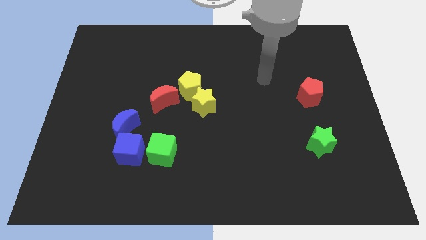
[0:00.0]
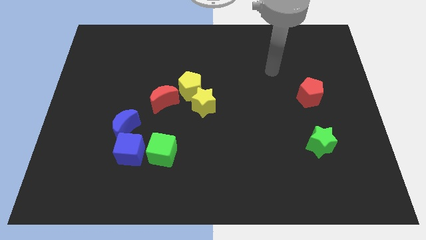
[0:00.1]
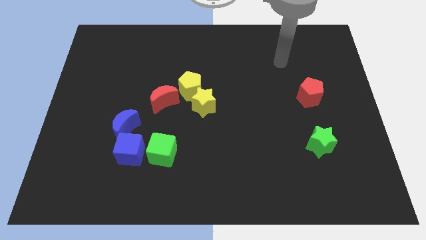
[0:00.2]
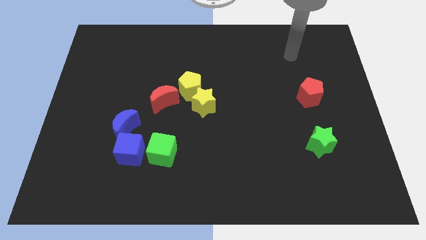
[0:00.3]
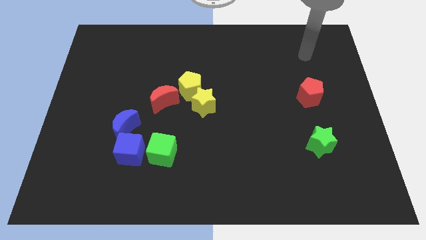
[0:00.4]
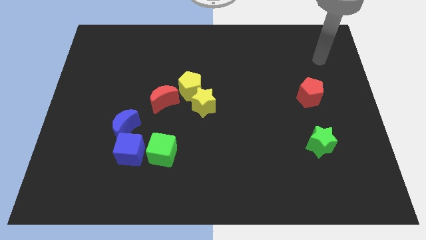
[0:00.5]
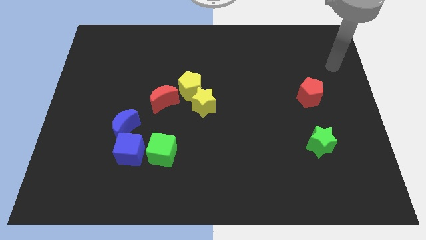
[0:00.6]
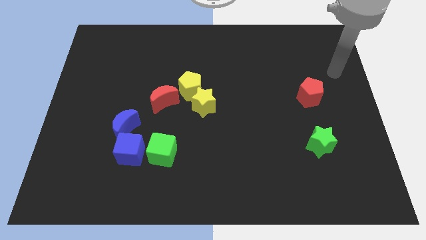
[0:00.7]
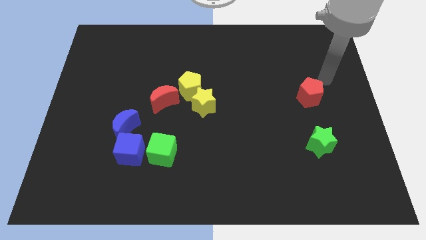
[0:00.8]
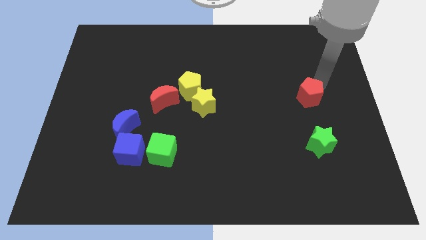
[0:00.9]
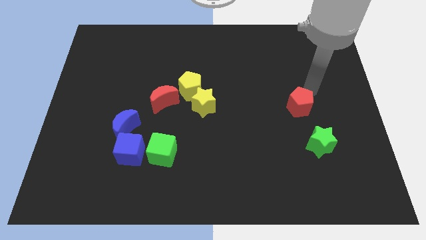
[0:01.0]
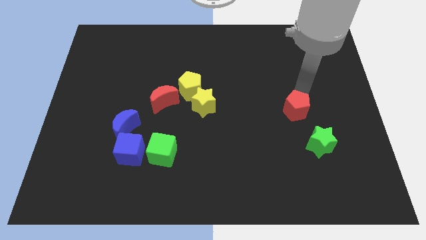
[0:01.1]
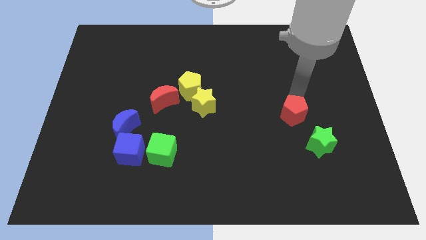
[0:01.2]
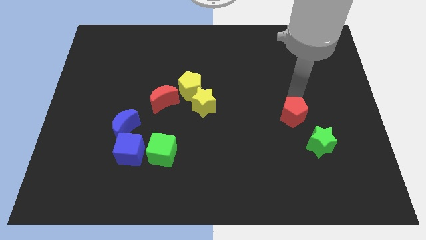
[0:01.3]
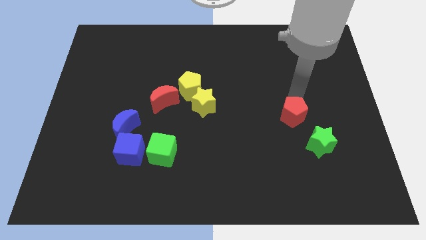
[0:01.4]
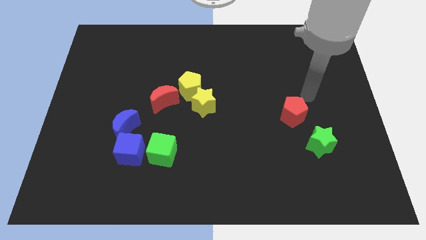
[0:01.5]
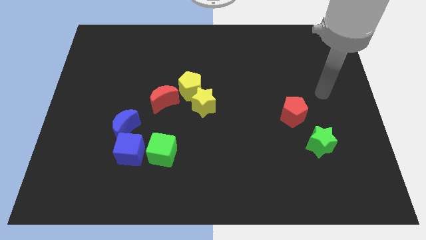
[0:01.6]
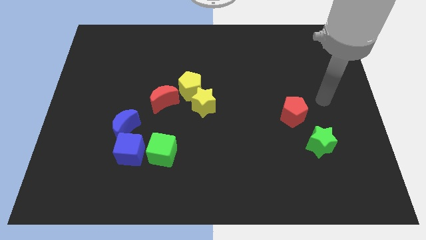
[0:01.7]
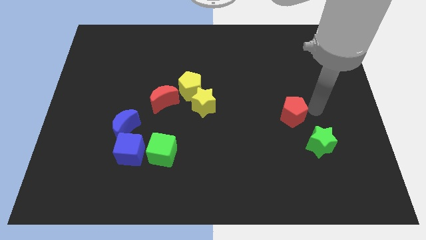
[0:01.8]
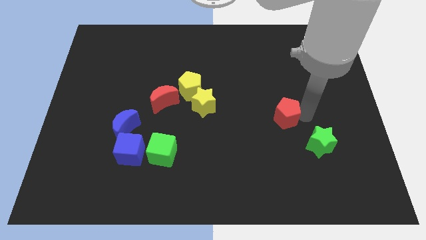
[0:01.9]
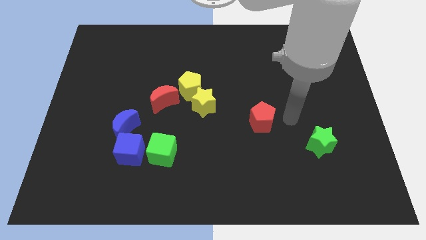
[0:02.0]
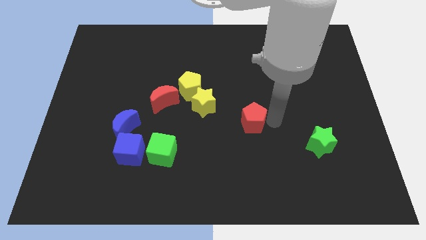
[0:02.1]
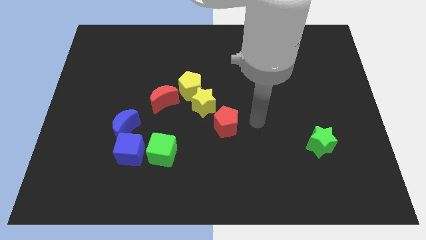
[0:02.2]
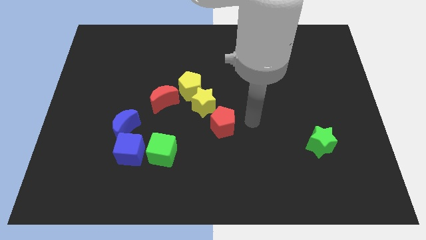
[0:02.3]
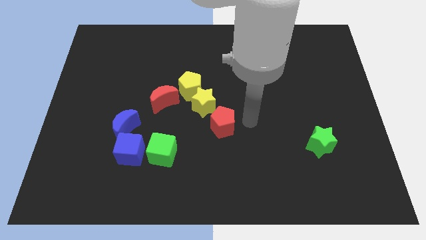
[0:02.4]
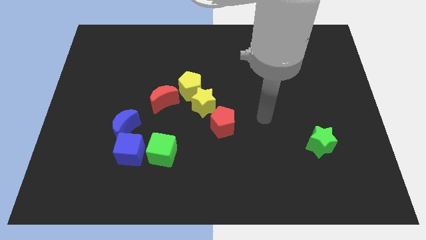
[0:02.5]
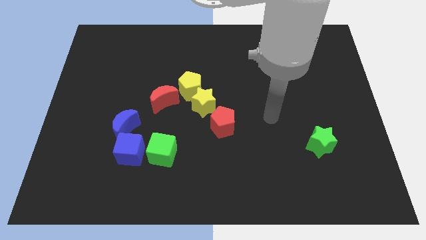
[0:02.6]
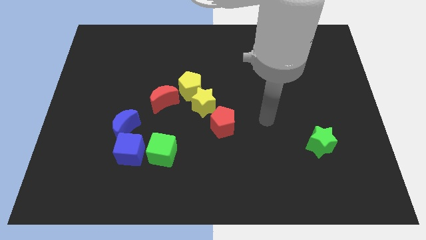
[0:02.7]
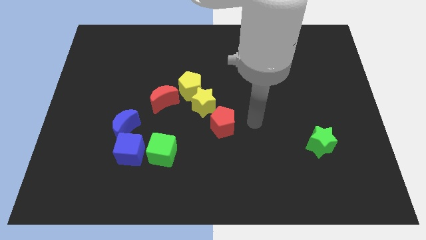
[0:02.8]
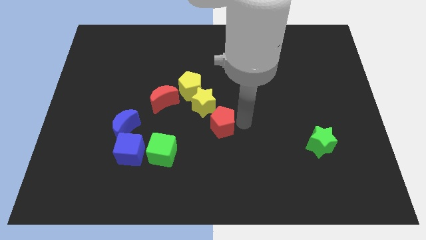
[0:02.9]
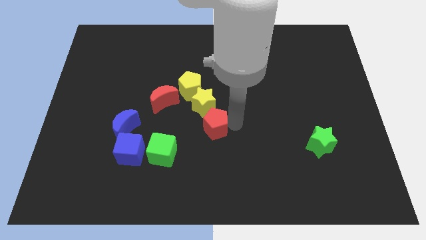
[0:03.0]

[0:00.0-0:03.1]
move the red pentagon diagonally on the top right side of the green cube

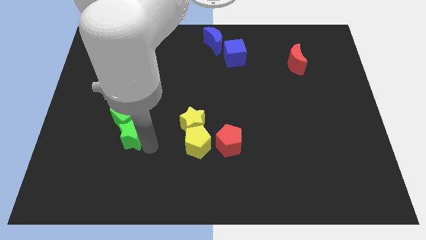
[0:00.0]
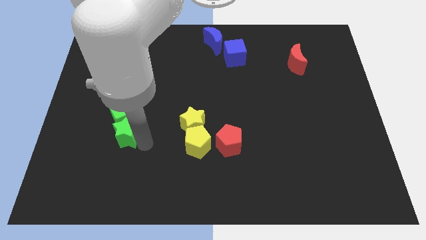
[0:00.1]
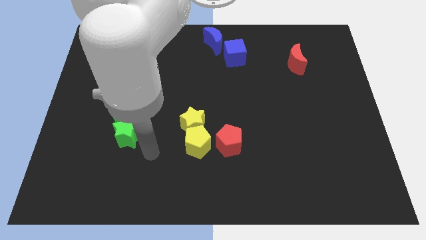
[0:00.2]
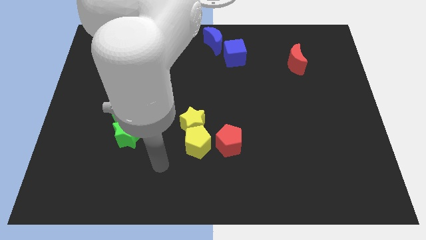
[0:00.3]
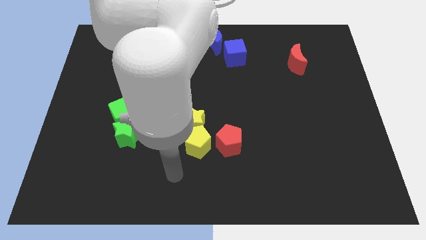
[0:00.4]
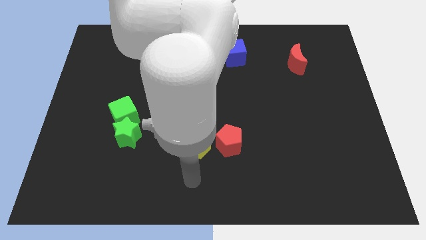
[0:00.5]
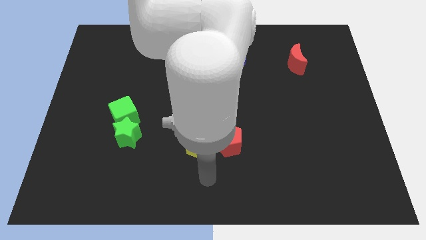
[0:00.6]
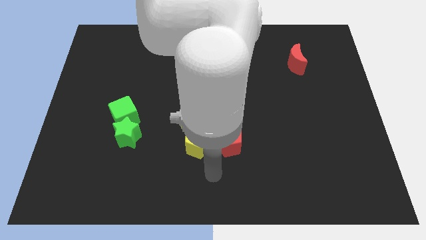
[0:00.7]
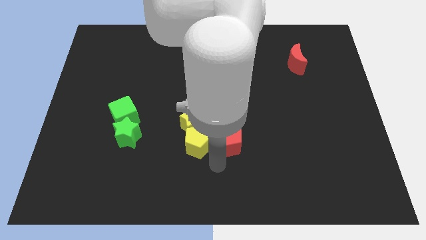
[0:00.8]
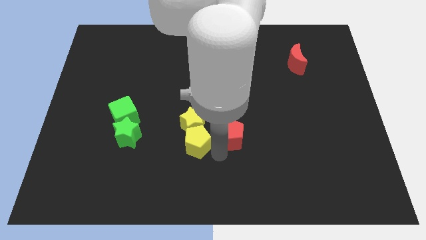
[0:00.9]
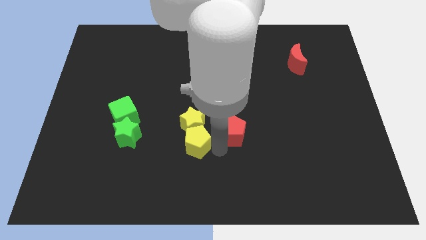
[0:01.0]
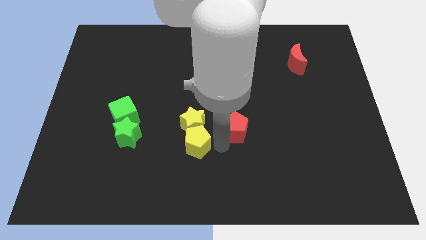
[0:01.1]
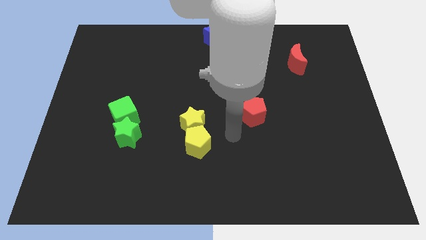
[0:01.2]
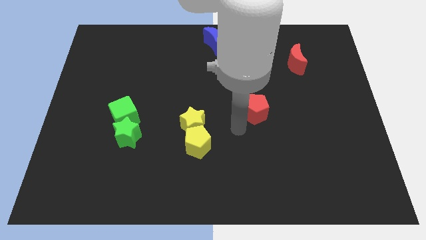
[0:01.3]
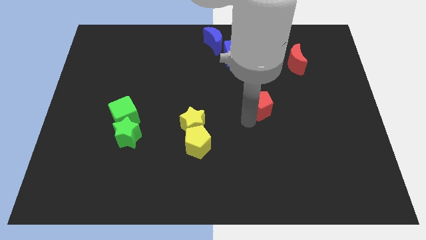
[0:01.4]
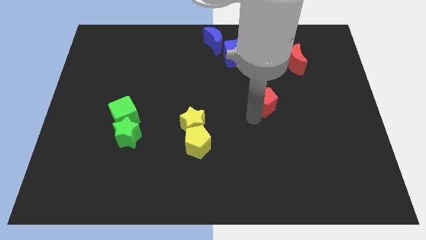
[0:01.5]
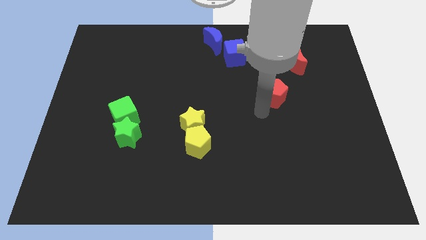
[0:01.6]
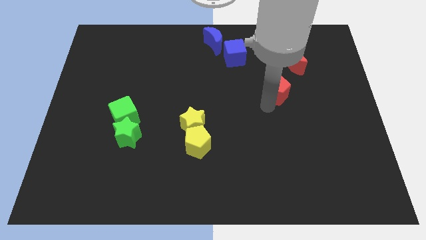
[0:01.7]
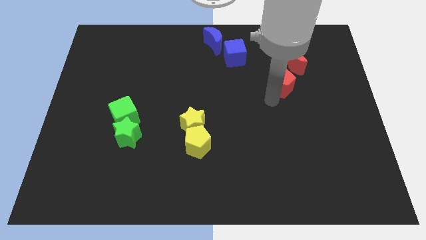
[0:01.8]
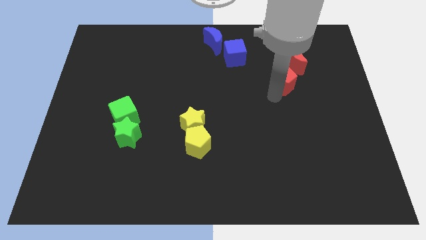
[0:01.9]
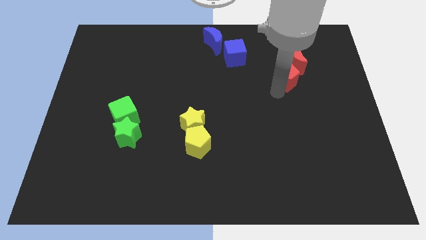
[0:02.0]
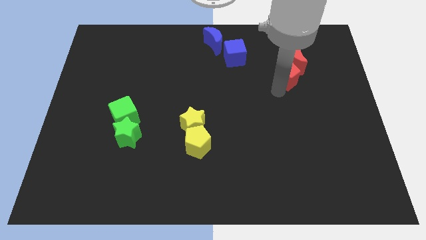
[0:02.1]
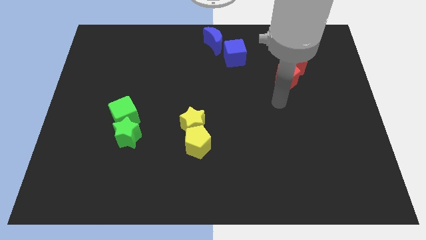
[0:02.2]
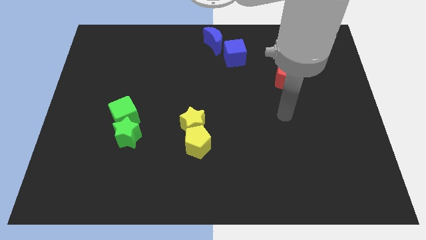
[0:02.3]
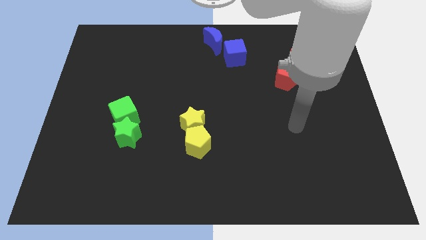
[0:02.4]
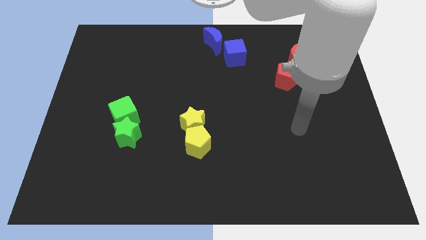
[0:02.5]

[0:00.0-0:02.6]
move the red pentagon to the bottom left of the red crescent

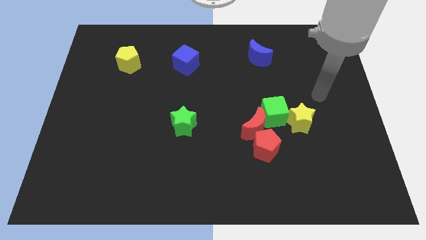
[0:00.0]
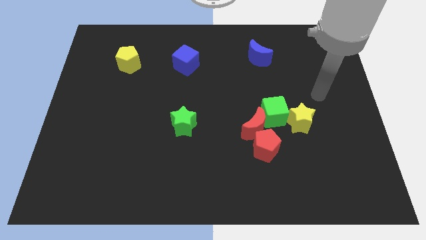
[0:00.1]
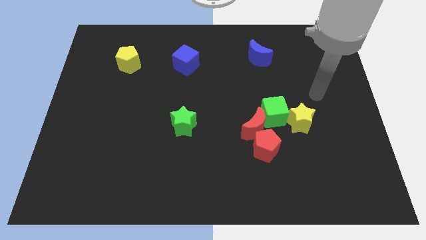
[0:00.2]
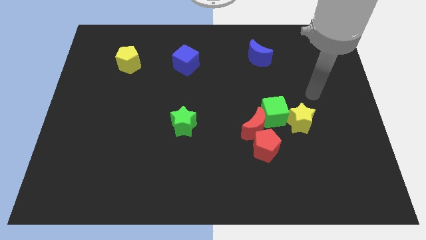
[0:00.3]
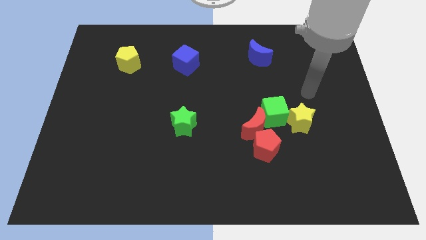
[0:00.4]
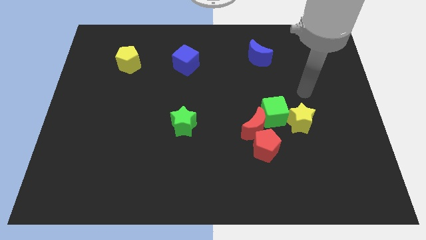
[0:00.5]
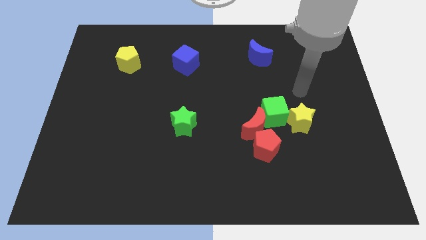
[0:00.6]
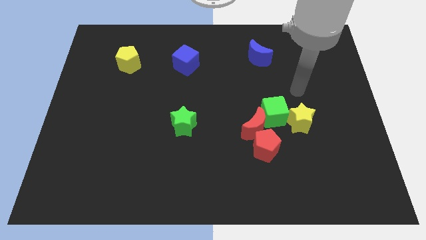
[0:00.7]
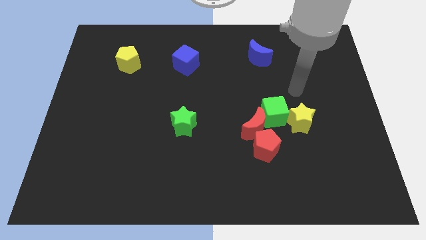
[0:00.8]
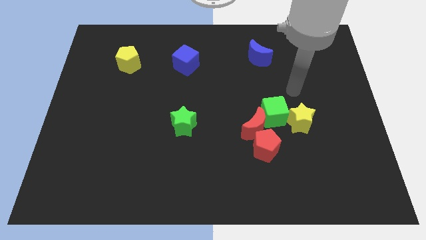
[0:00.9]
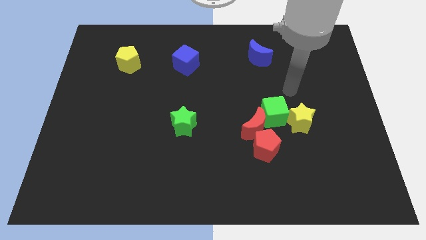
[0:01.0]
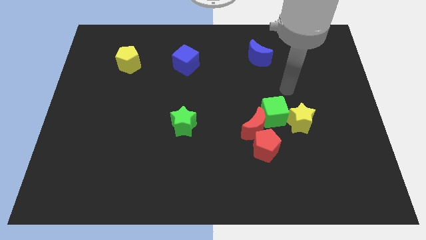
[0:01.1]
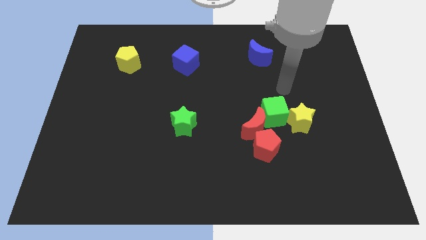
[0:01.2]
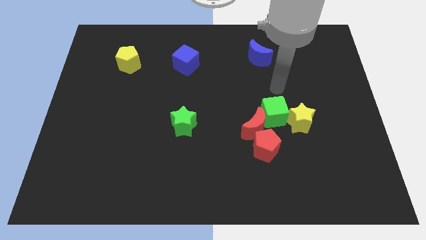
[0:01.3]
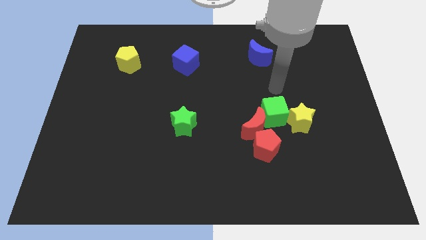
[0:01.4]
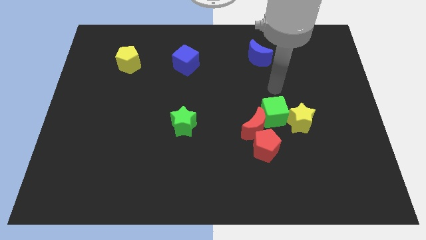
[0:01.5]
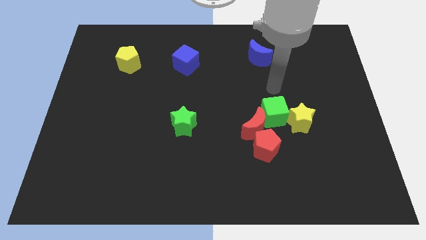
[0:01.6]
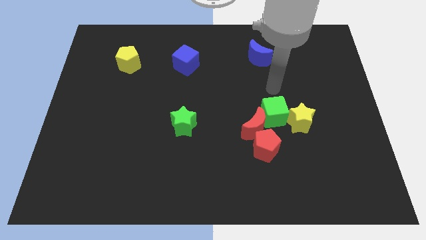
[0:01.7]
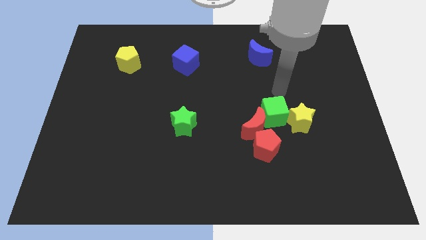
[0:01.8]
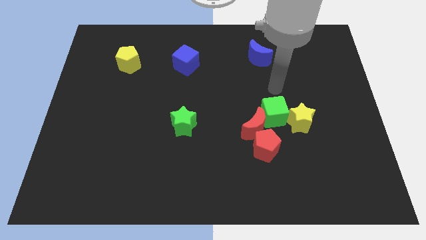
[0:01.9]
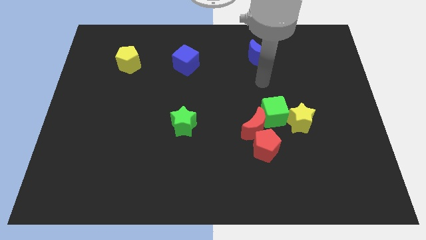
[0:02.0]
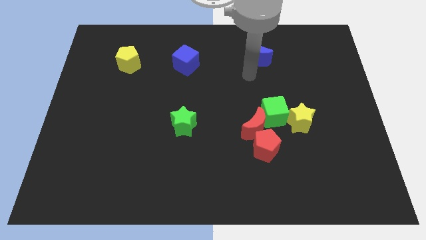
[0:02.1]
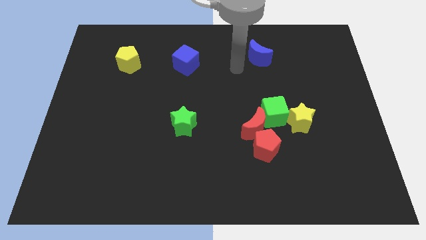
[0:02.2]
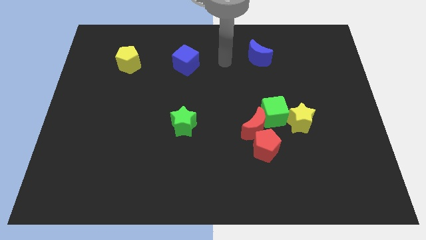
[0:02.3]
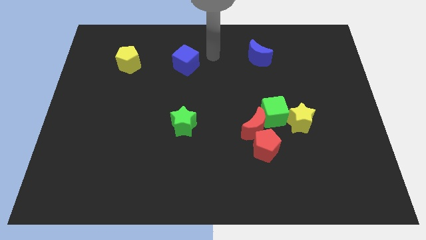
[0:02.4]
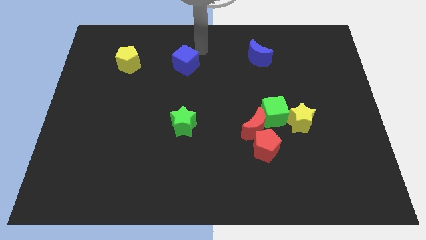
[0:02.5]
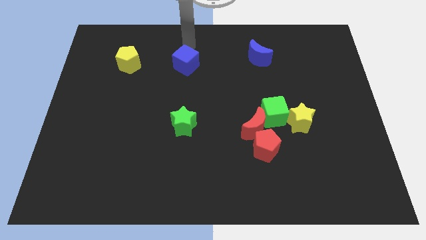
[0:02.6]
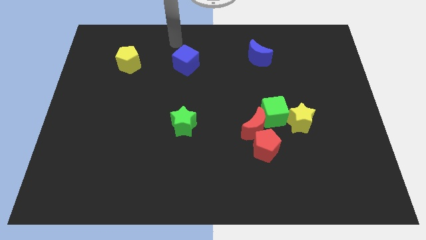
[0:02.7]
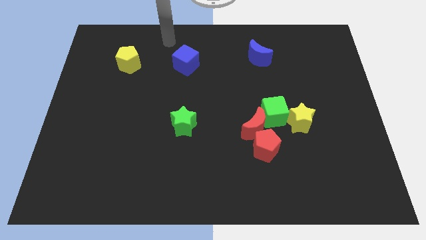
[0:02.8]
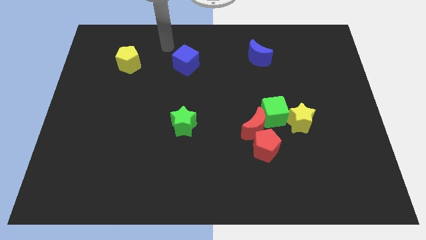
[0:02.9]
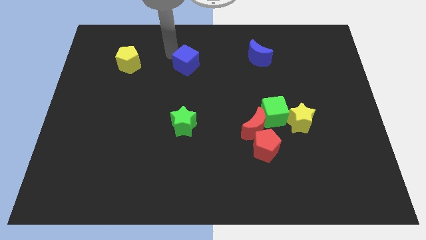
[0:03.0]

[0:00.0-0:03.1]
place the arm near the blue cube

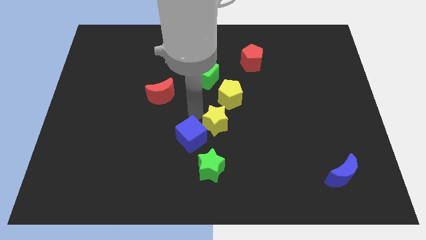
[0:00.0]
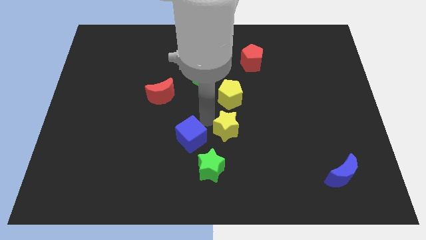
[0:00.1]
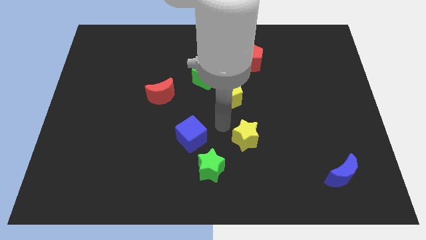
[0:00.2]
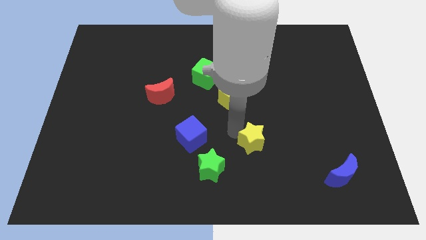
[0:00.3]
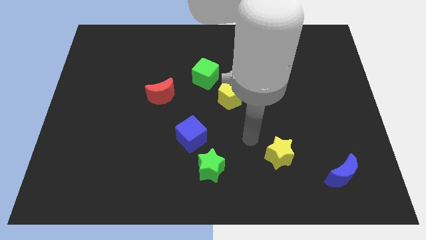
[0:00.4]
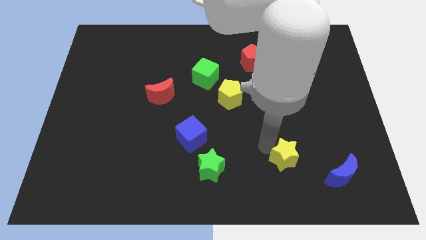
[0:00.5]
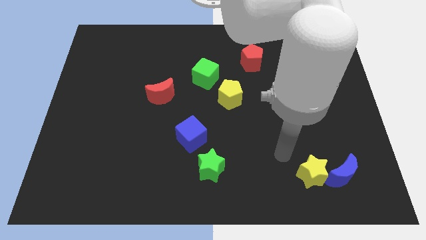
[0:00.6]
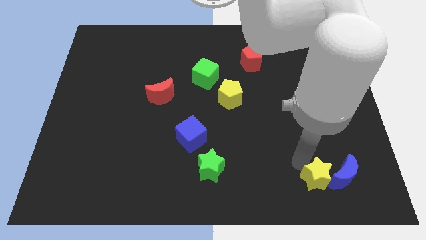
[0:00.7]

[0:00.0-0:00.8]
move the yellow star towards the right bottom
